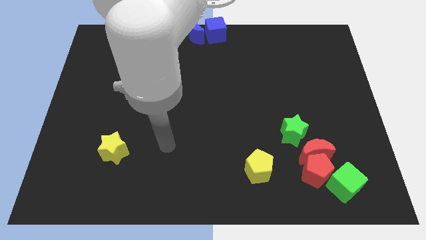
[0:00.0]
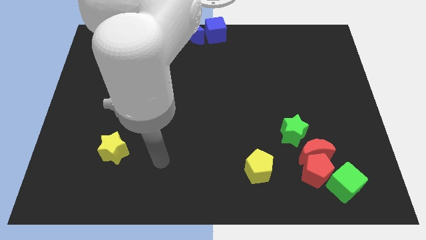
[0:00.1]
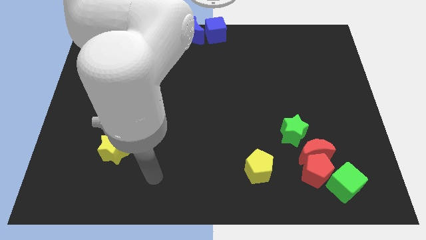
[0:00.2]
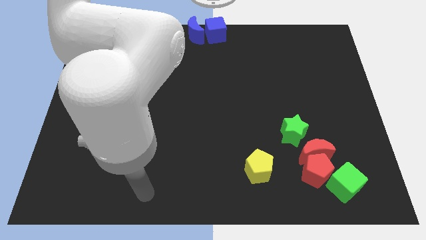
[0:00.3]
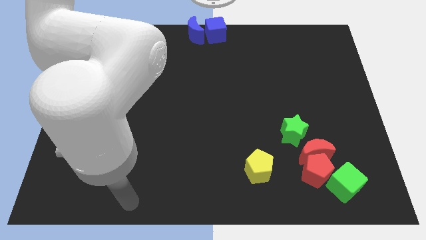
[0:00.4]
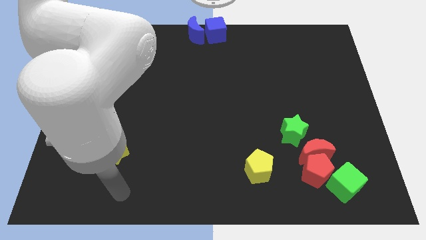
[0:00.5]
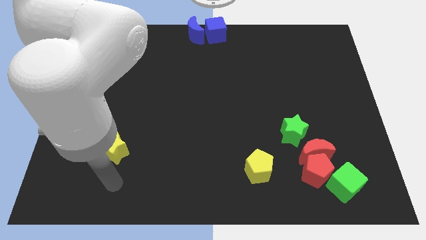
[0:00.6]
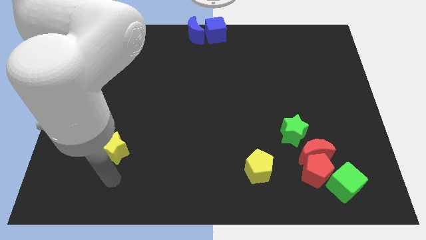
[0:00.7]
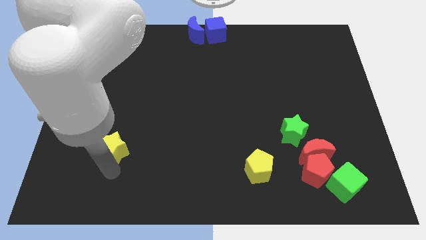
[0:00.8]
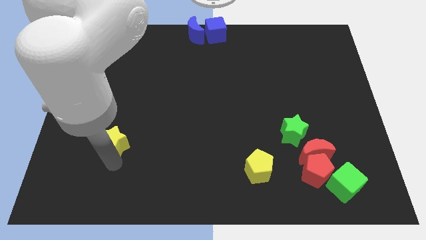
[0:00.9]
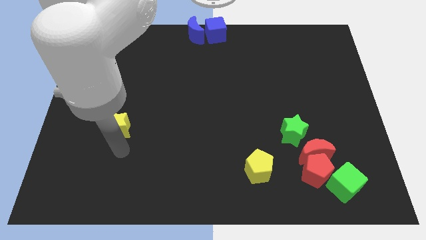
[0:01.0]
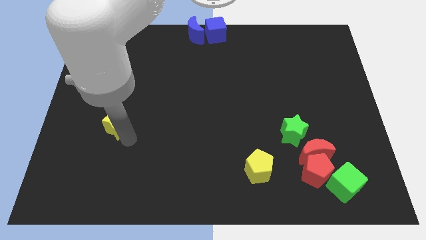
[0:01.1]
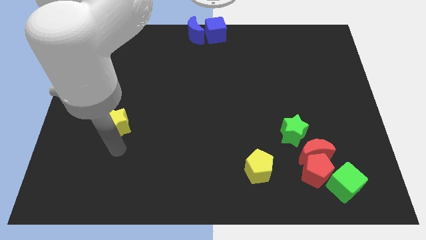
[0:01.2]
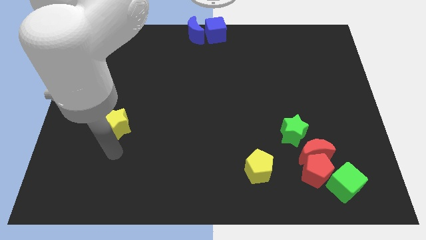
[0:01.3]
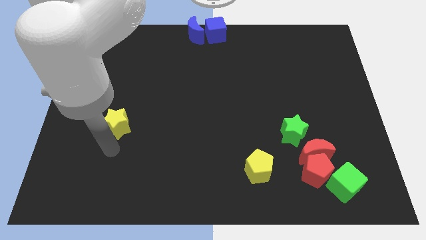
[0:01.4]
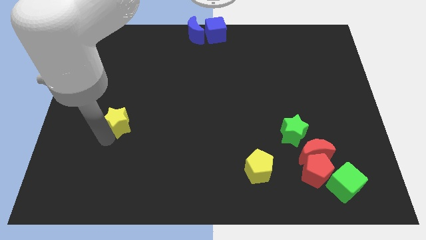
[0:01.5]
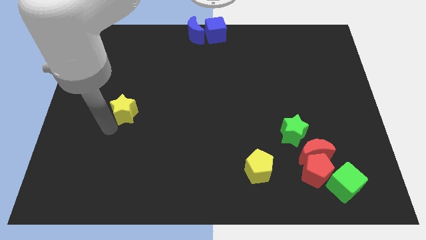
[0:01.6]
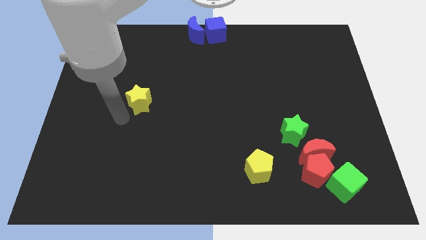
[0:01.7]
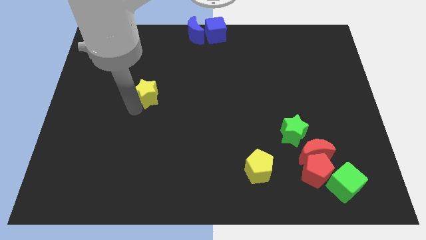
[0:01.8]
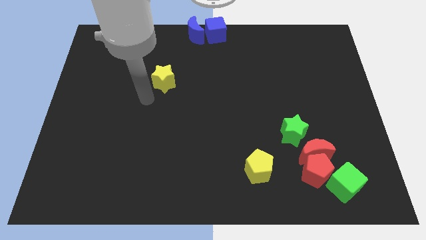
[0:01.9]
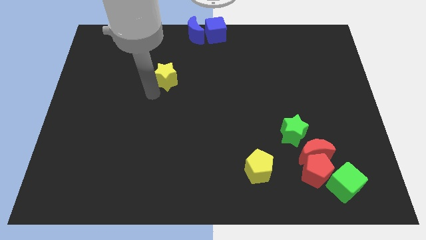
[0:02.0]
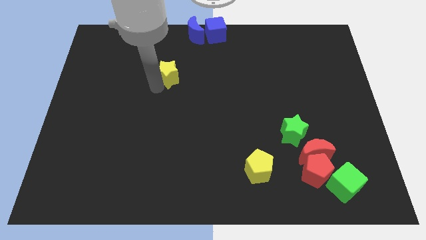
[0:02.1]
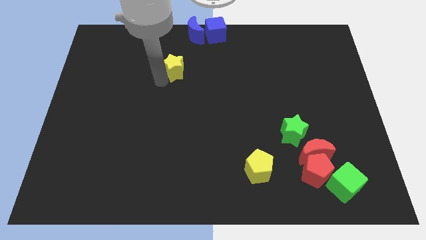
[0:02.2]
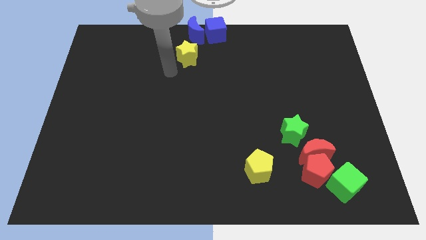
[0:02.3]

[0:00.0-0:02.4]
push the yellow star towards the blue cube

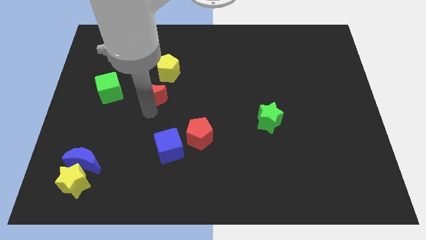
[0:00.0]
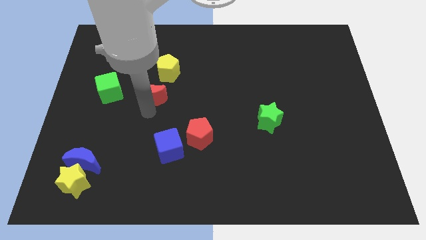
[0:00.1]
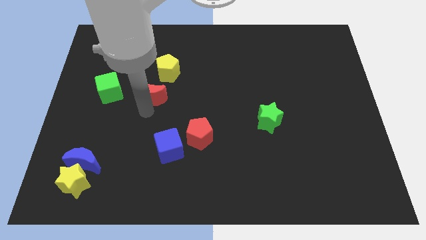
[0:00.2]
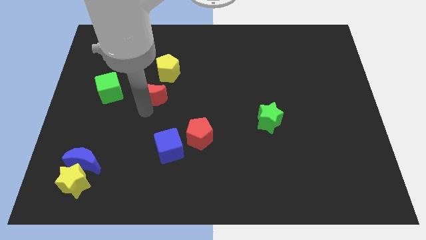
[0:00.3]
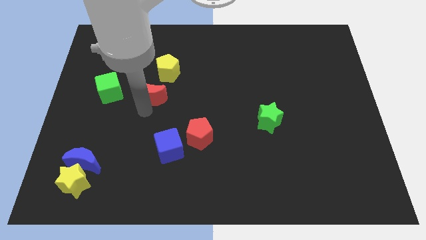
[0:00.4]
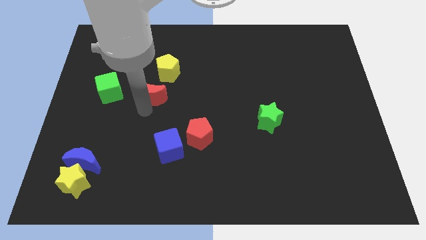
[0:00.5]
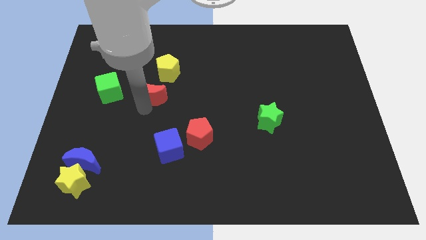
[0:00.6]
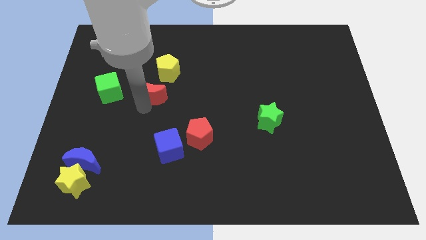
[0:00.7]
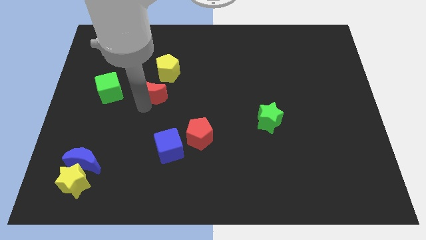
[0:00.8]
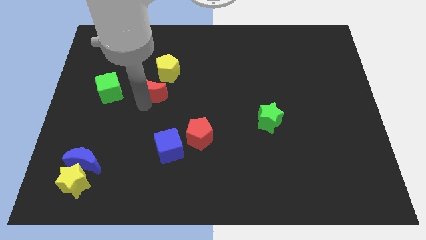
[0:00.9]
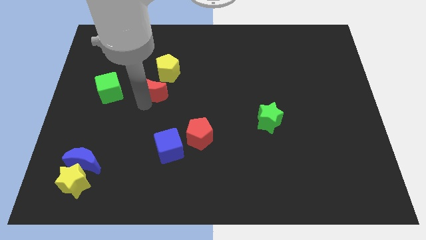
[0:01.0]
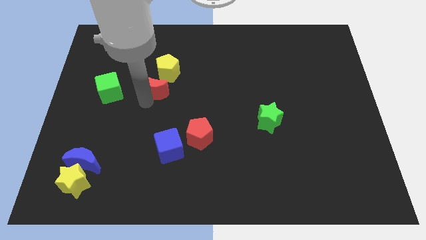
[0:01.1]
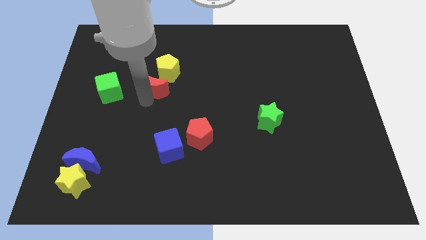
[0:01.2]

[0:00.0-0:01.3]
push the red crescent towards the yellow pentagon

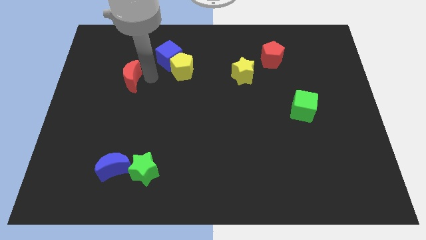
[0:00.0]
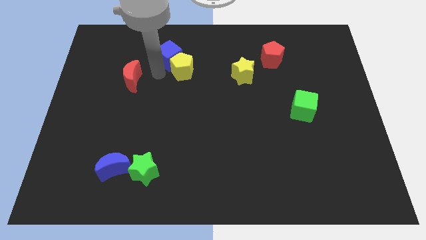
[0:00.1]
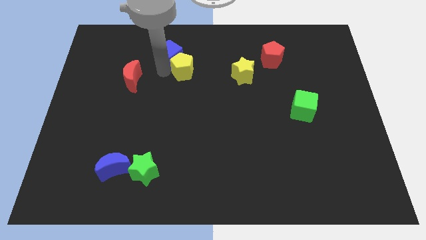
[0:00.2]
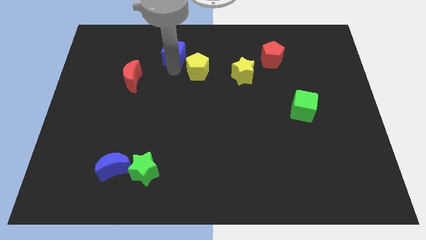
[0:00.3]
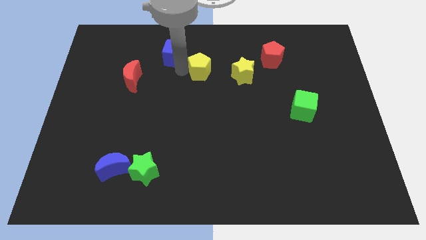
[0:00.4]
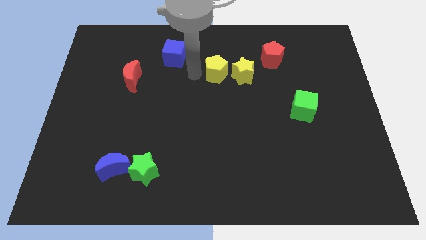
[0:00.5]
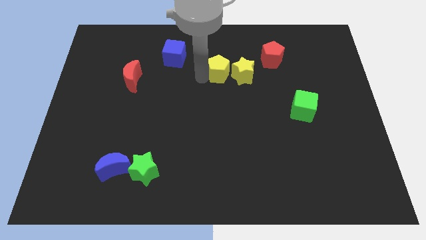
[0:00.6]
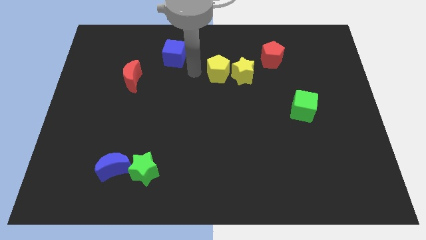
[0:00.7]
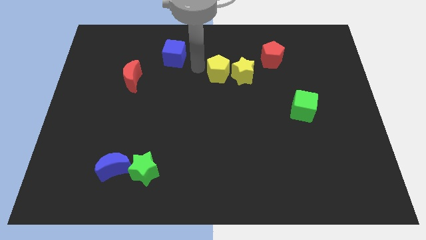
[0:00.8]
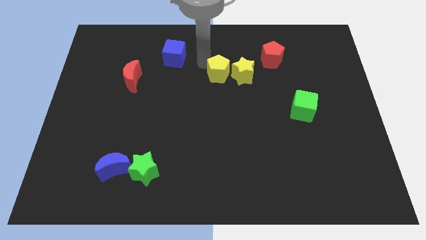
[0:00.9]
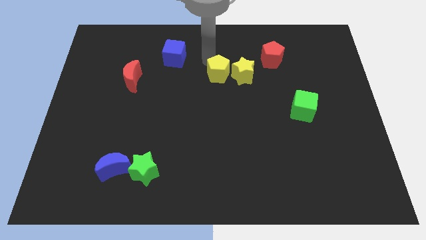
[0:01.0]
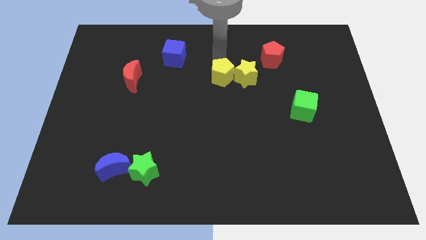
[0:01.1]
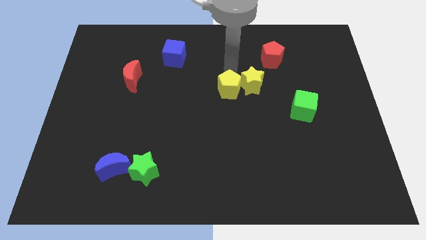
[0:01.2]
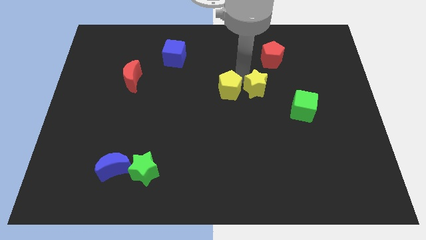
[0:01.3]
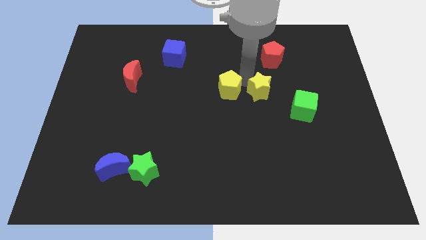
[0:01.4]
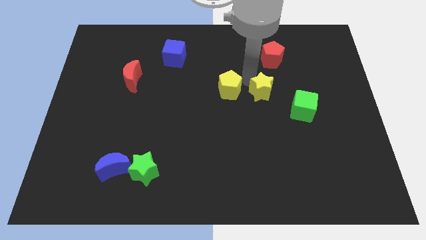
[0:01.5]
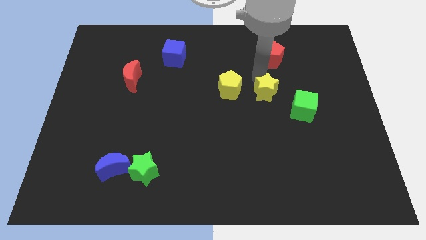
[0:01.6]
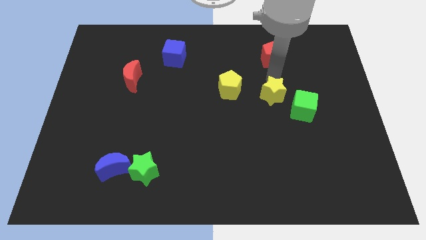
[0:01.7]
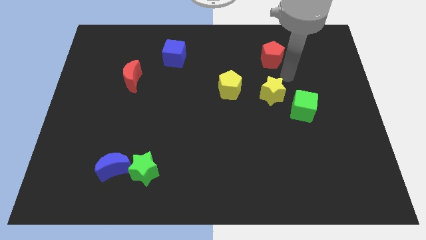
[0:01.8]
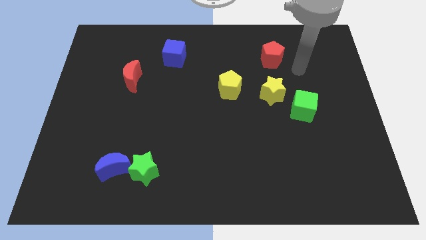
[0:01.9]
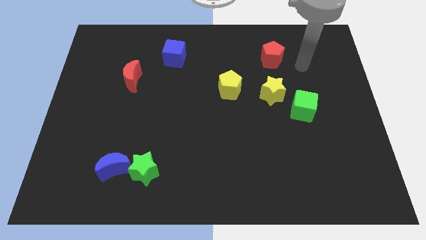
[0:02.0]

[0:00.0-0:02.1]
place the yellow star under the red pentagon

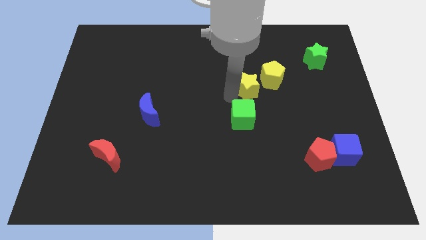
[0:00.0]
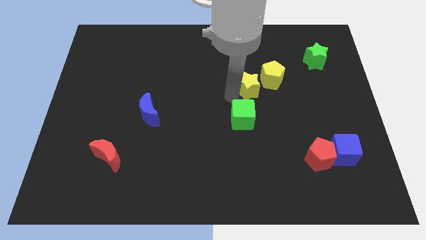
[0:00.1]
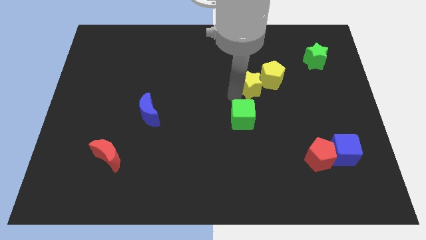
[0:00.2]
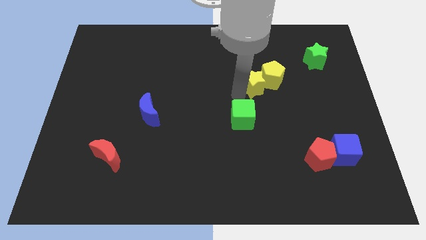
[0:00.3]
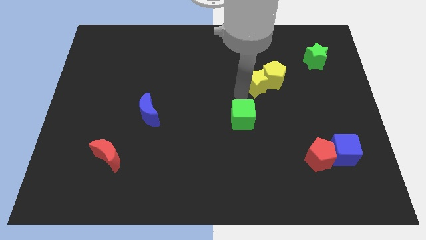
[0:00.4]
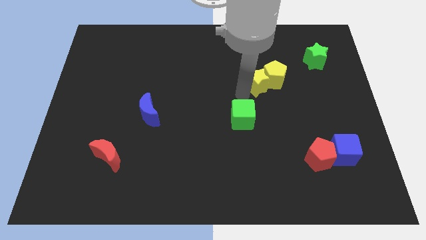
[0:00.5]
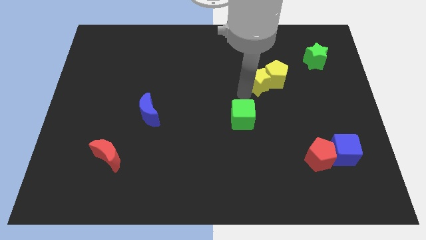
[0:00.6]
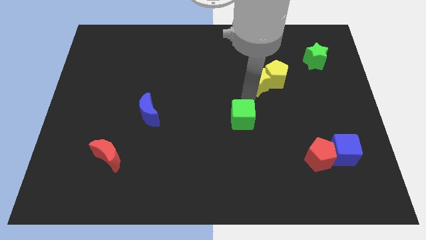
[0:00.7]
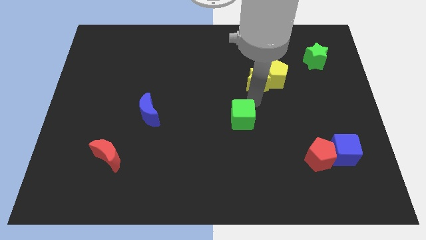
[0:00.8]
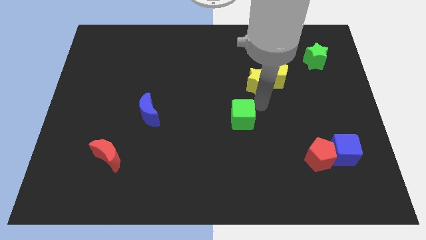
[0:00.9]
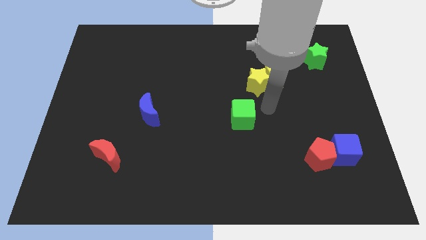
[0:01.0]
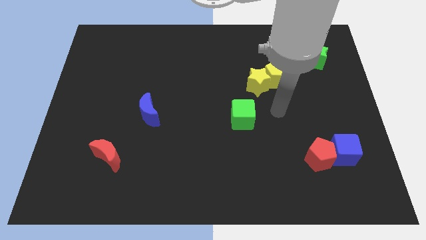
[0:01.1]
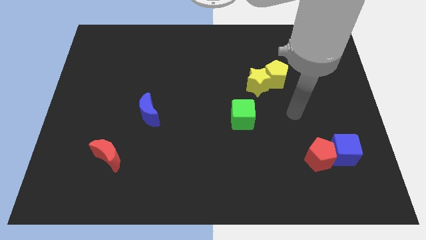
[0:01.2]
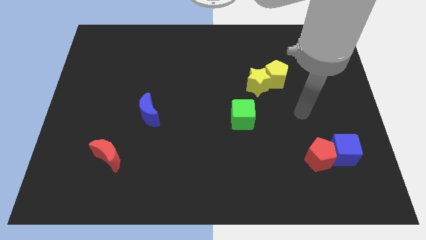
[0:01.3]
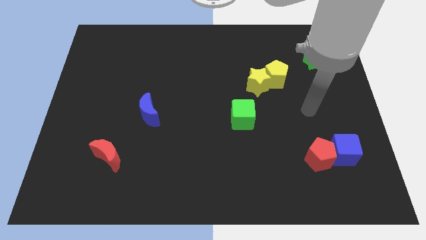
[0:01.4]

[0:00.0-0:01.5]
push the yellow pentagon with the yellow star towards the top right

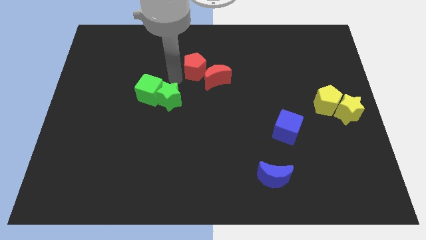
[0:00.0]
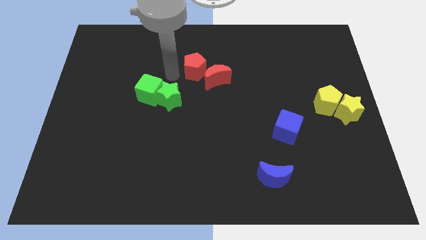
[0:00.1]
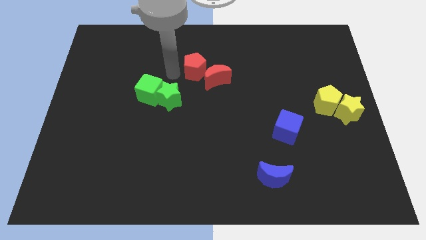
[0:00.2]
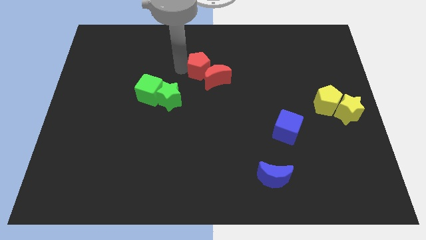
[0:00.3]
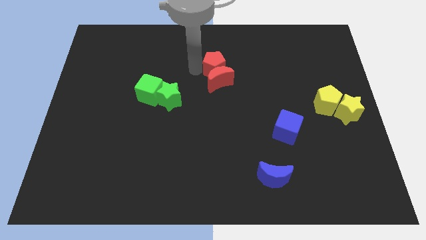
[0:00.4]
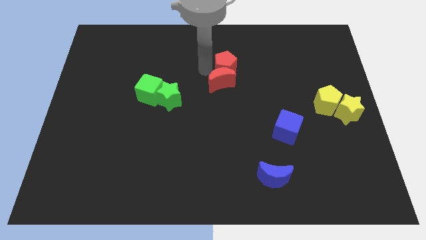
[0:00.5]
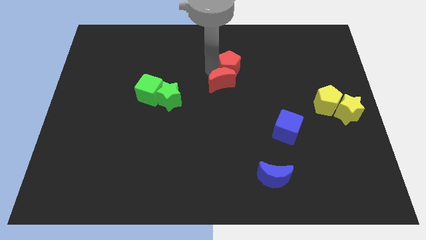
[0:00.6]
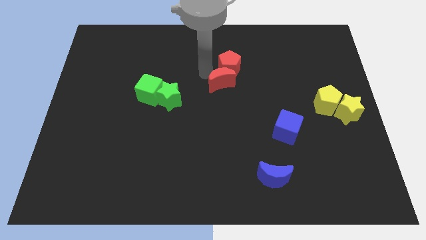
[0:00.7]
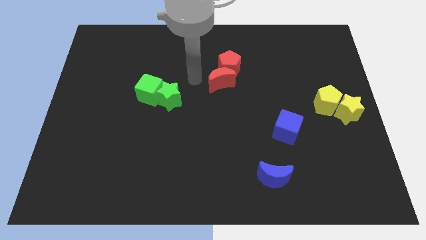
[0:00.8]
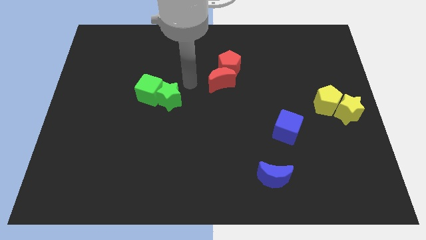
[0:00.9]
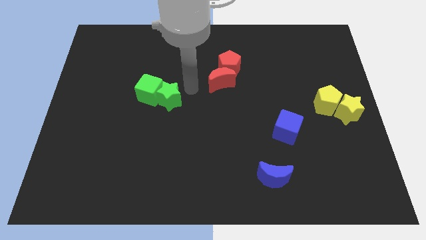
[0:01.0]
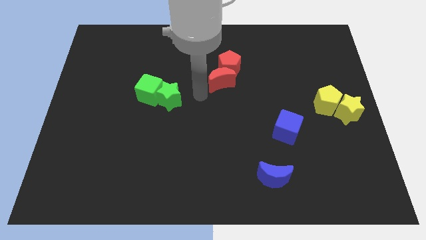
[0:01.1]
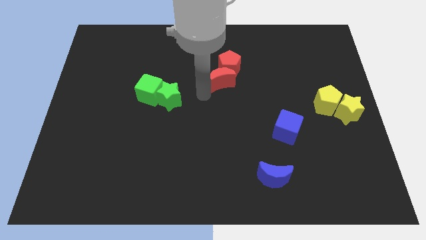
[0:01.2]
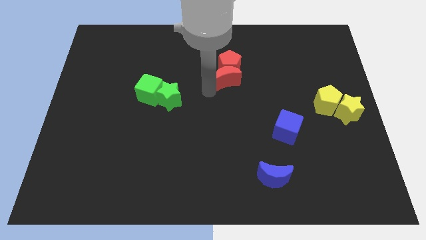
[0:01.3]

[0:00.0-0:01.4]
push the red pentagon to the top side of the red crescent

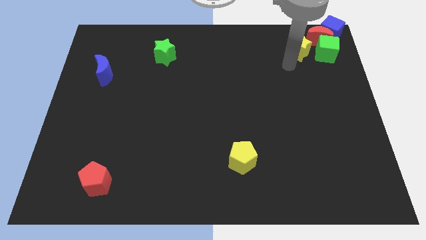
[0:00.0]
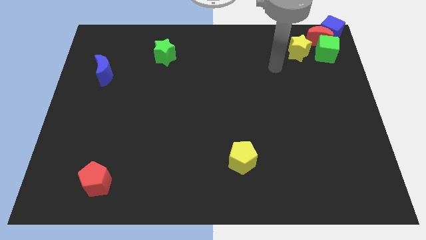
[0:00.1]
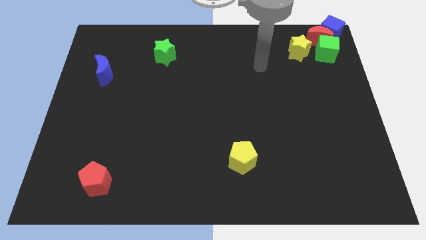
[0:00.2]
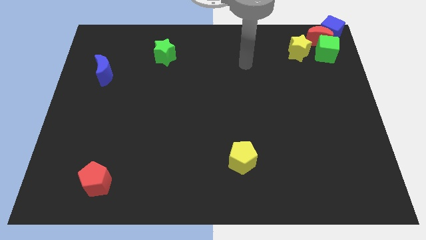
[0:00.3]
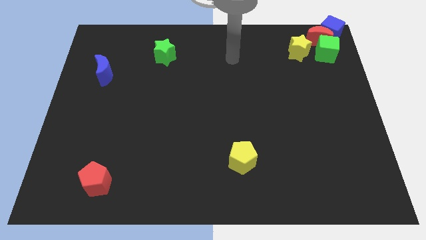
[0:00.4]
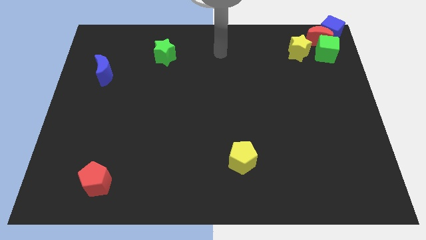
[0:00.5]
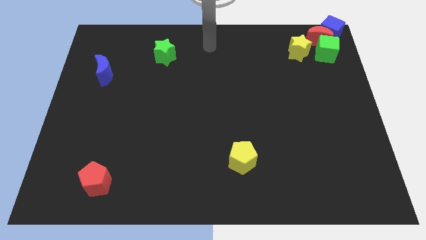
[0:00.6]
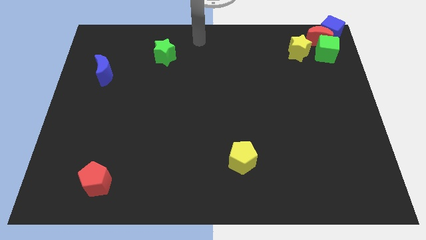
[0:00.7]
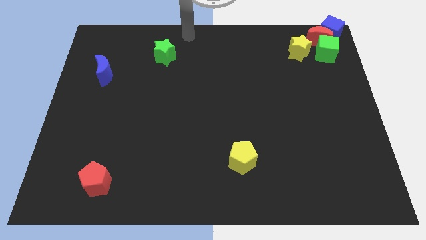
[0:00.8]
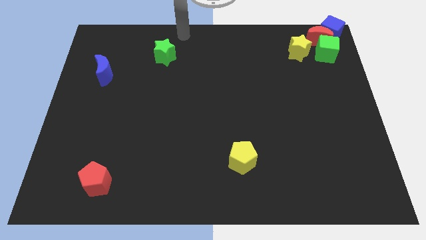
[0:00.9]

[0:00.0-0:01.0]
move the arm away from the yellow star
